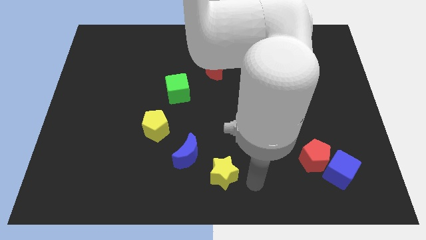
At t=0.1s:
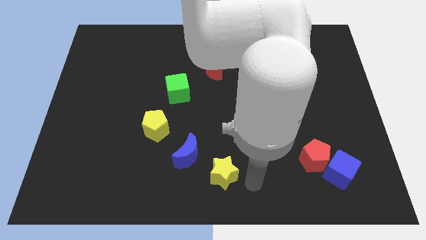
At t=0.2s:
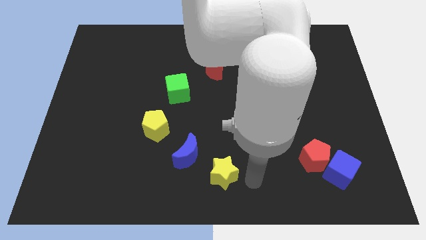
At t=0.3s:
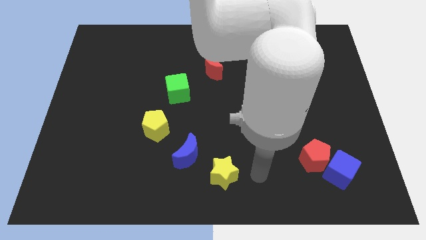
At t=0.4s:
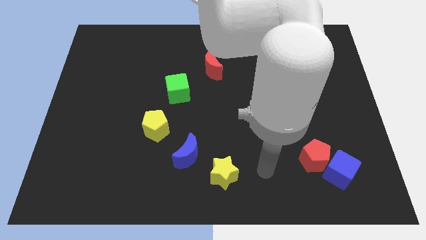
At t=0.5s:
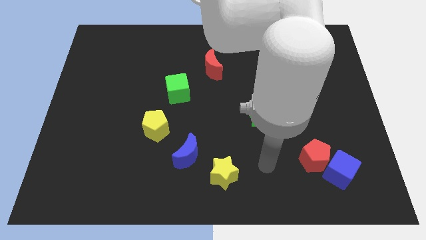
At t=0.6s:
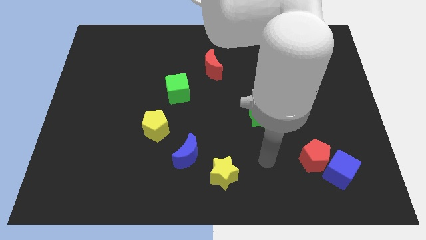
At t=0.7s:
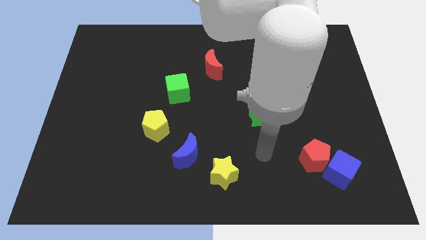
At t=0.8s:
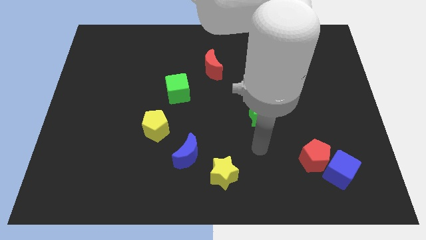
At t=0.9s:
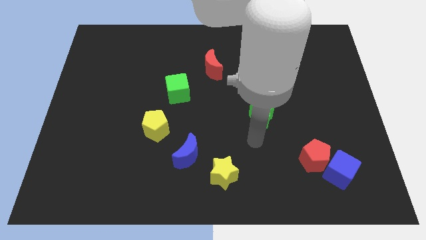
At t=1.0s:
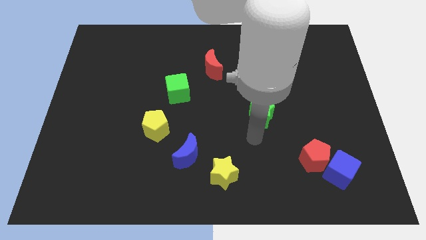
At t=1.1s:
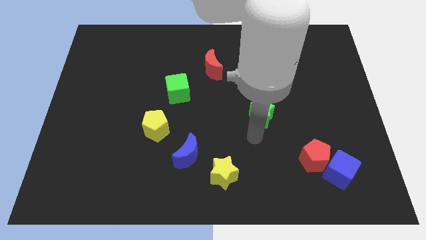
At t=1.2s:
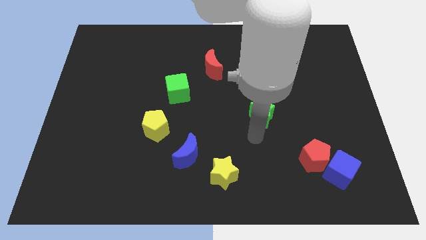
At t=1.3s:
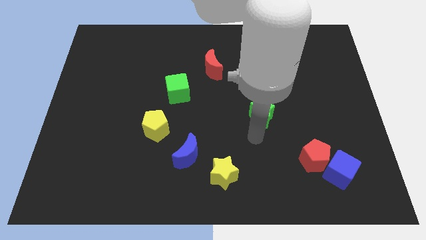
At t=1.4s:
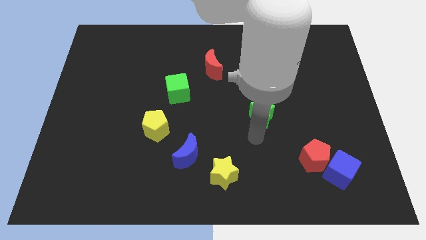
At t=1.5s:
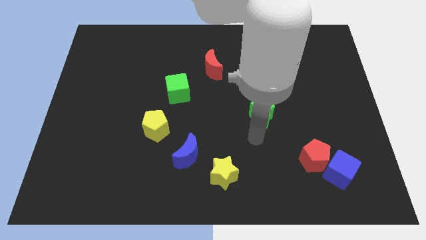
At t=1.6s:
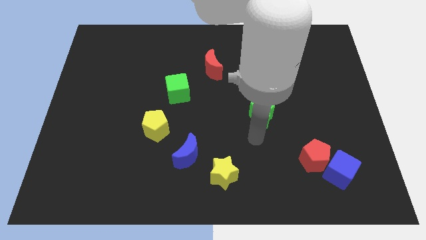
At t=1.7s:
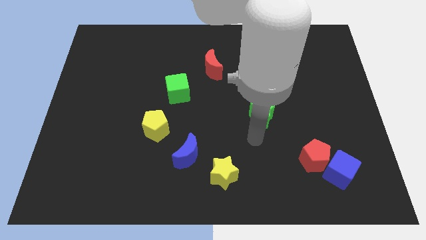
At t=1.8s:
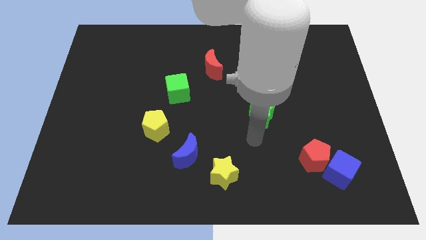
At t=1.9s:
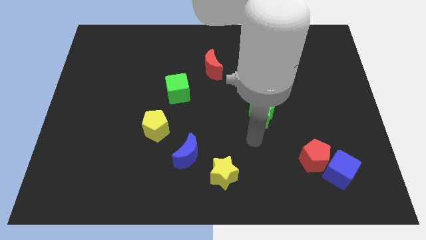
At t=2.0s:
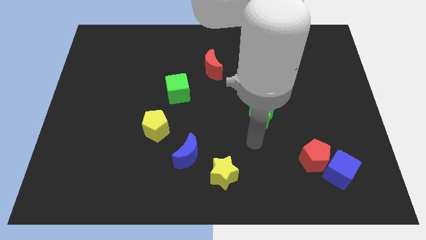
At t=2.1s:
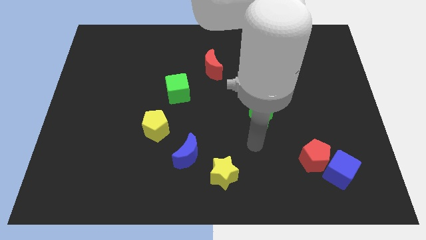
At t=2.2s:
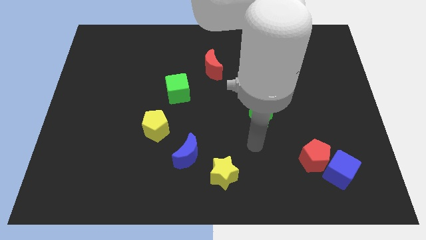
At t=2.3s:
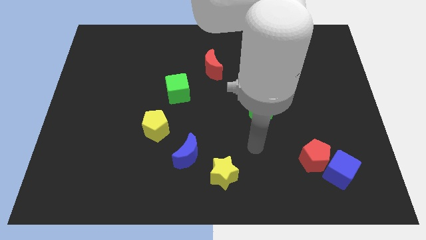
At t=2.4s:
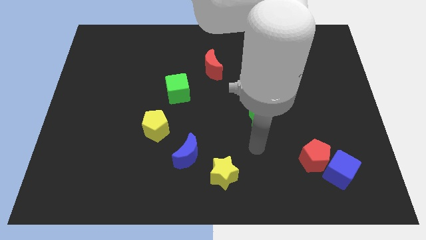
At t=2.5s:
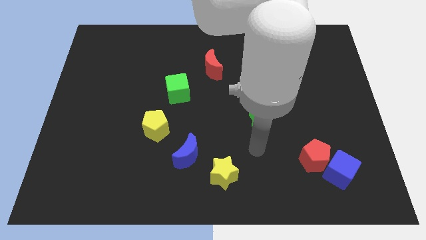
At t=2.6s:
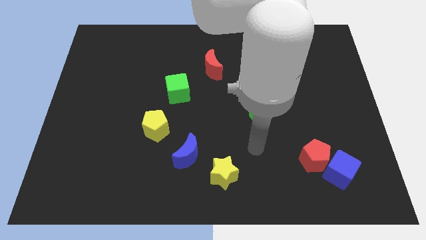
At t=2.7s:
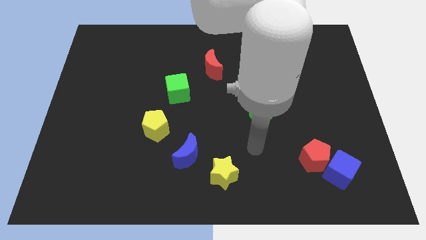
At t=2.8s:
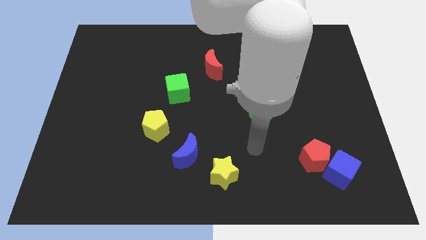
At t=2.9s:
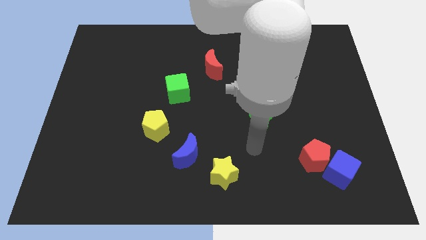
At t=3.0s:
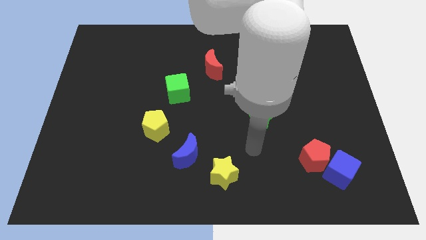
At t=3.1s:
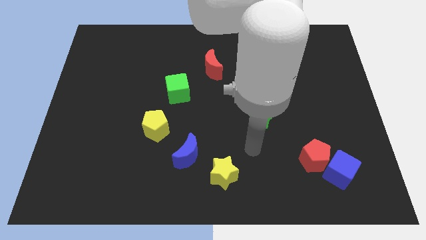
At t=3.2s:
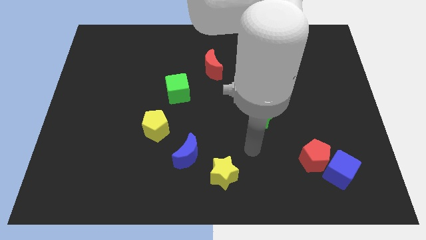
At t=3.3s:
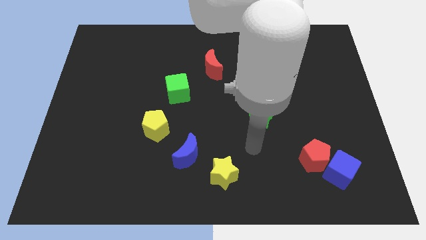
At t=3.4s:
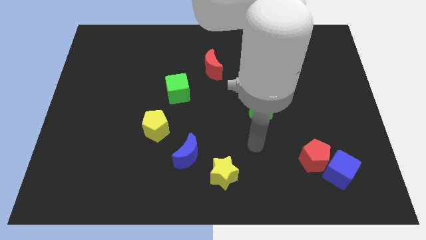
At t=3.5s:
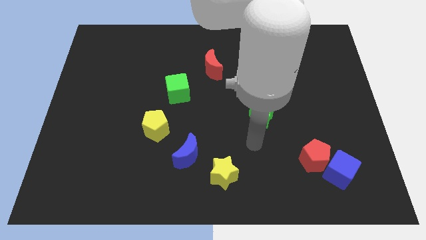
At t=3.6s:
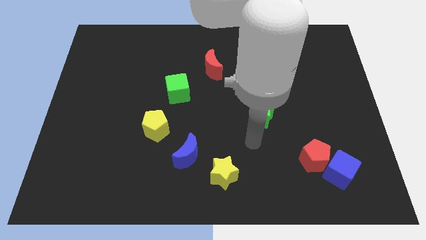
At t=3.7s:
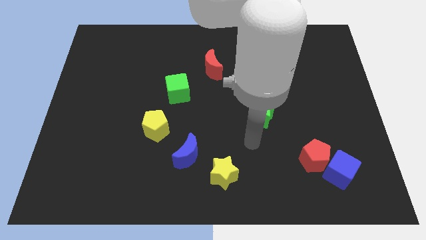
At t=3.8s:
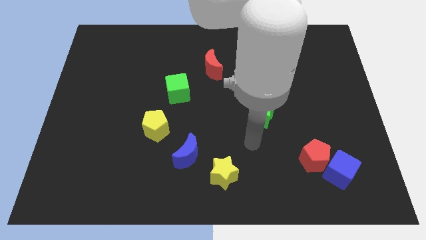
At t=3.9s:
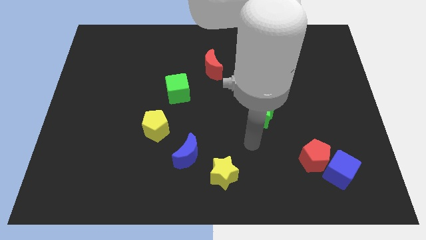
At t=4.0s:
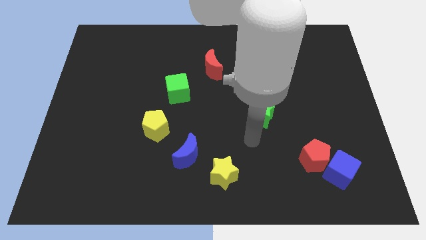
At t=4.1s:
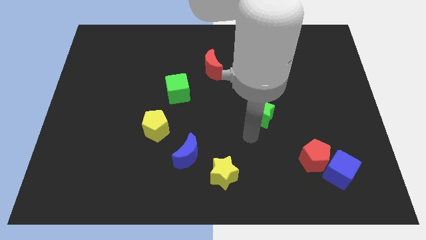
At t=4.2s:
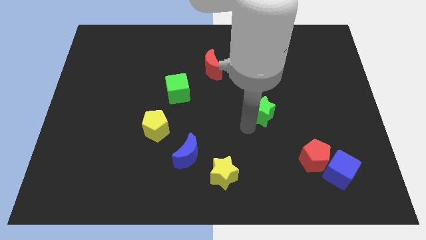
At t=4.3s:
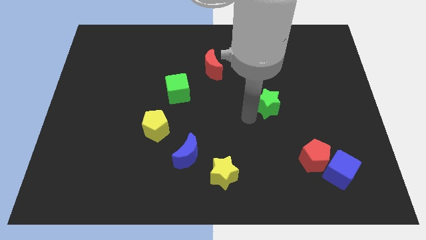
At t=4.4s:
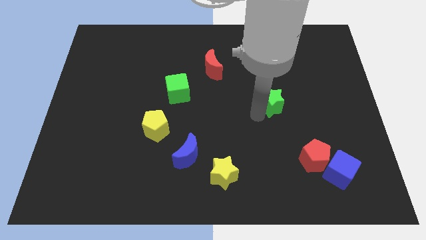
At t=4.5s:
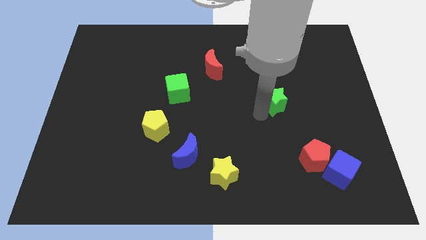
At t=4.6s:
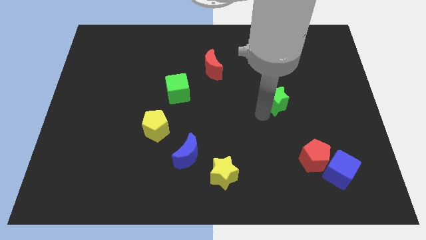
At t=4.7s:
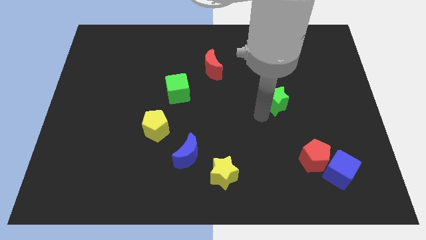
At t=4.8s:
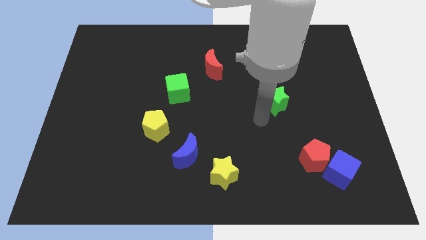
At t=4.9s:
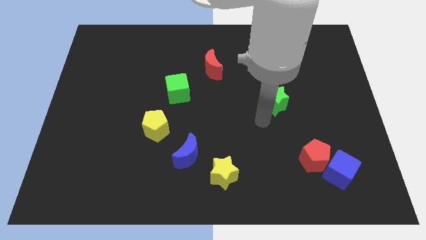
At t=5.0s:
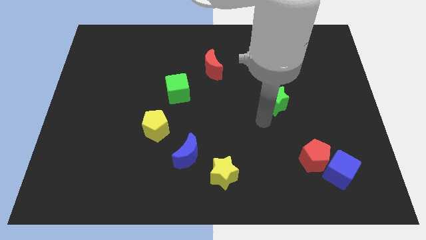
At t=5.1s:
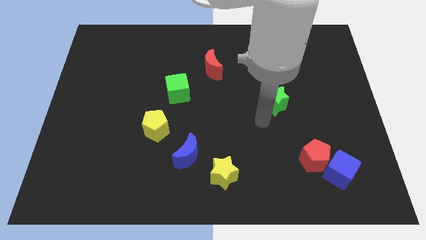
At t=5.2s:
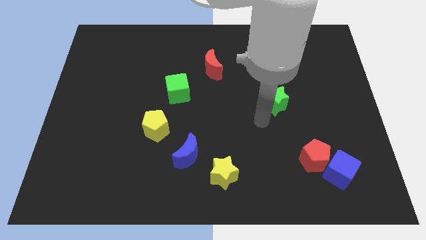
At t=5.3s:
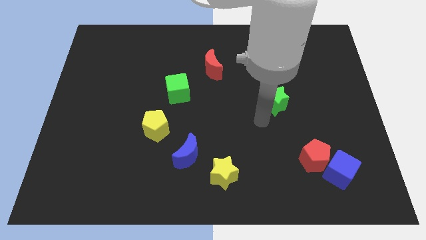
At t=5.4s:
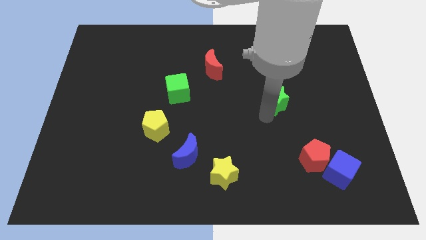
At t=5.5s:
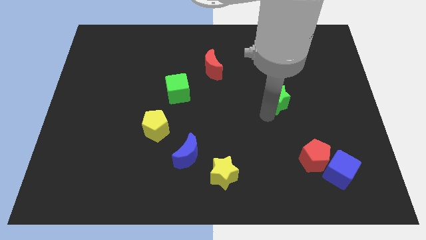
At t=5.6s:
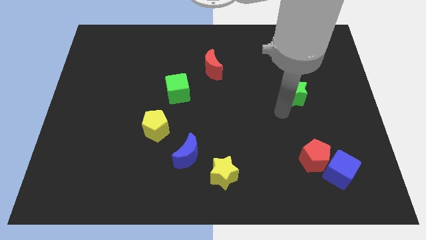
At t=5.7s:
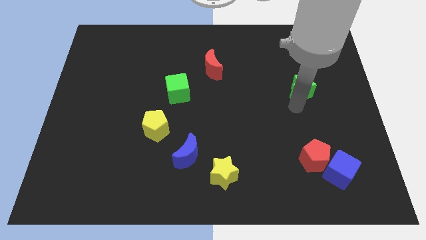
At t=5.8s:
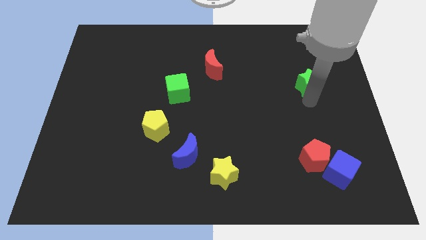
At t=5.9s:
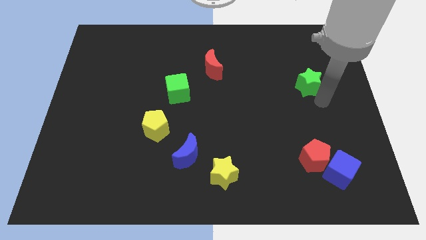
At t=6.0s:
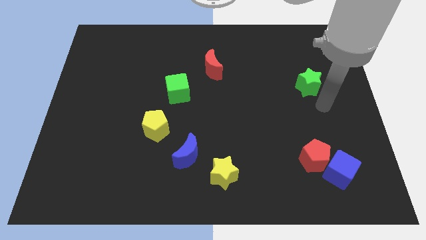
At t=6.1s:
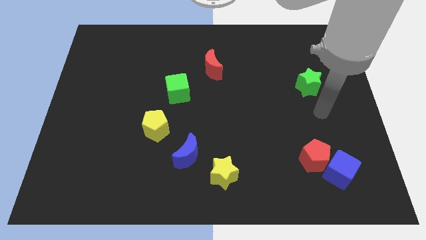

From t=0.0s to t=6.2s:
move the green star slightly towards the top right corner of the board

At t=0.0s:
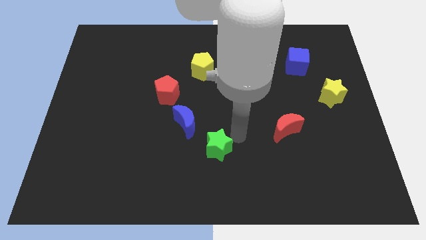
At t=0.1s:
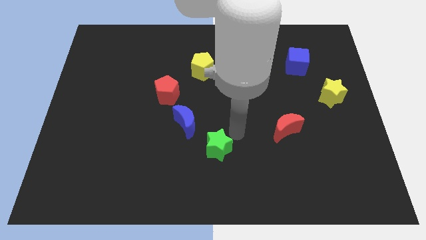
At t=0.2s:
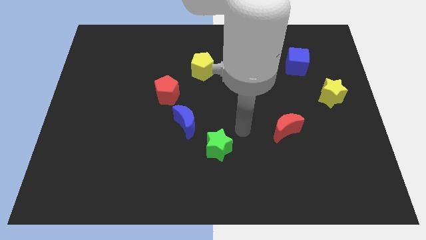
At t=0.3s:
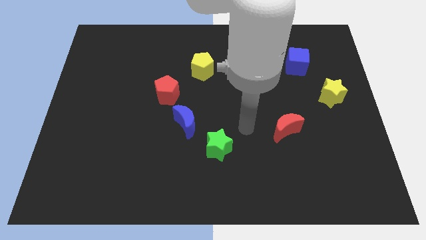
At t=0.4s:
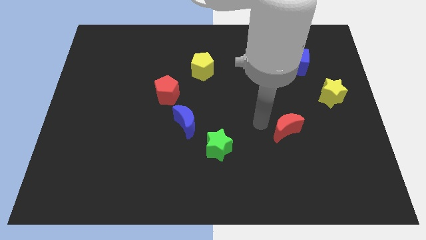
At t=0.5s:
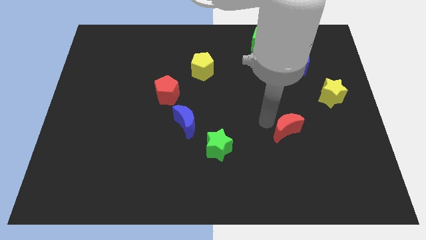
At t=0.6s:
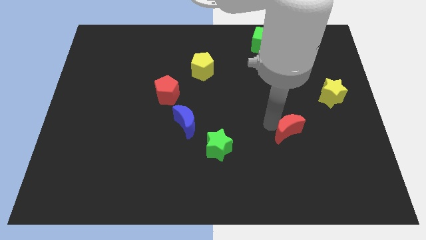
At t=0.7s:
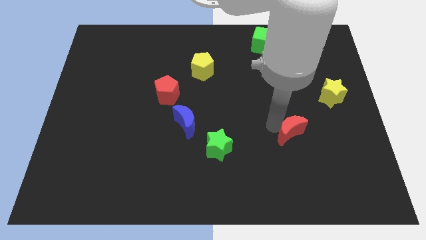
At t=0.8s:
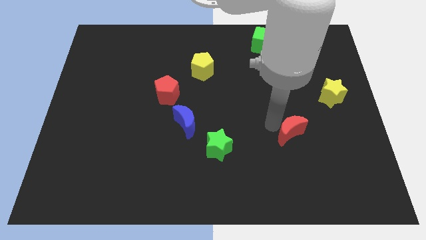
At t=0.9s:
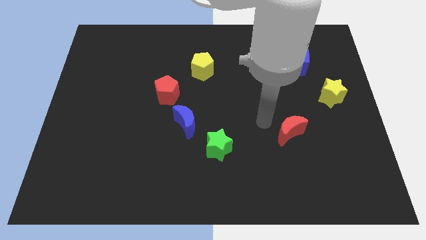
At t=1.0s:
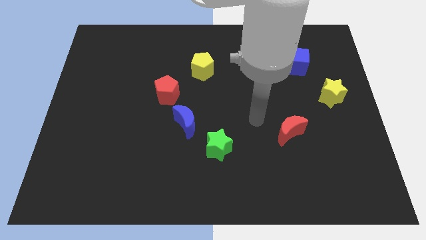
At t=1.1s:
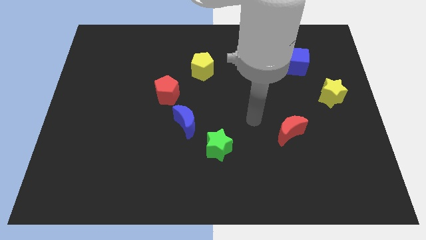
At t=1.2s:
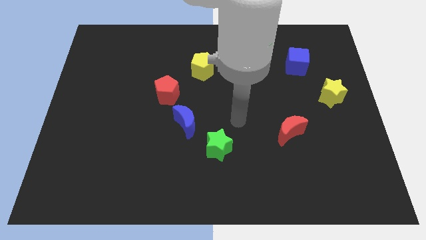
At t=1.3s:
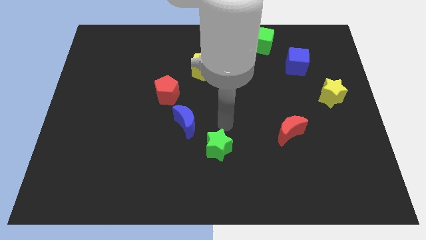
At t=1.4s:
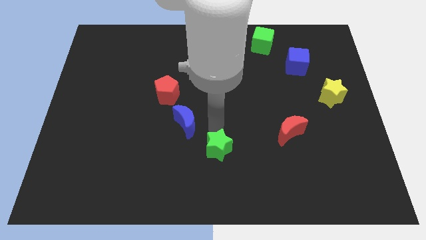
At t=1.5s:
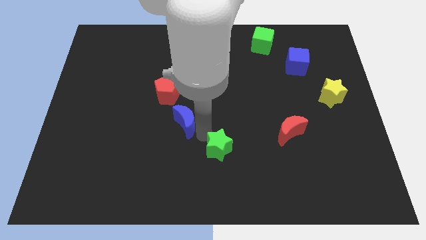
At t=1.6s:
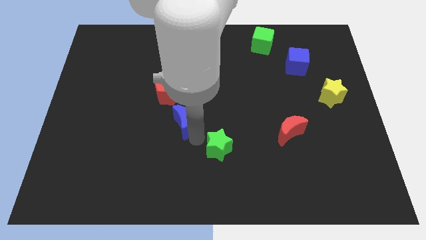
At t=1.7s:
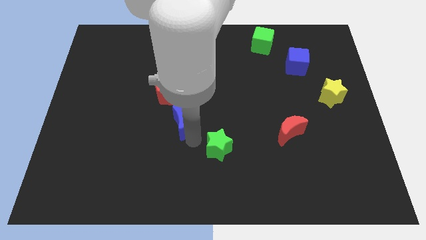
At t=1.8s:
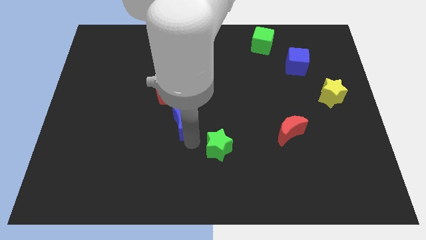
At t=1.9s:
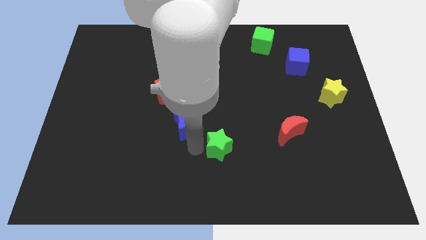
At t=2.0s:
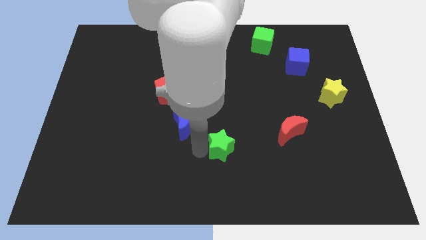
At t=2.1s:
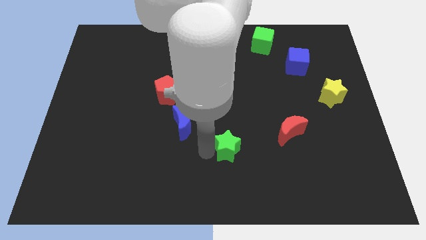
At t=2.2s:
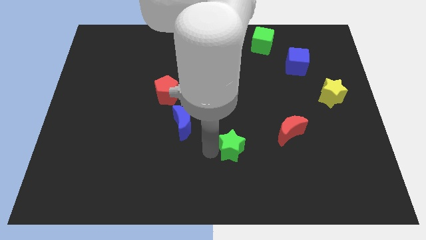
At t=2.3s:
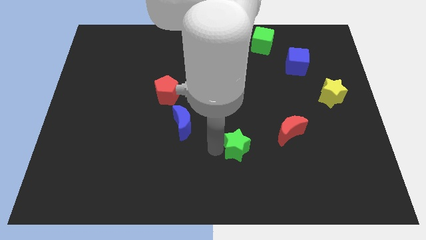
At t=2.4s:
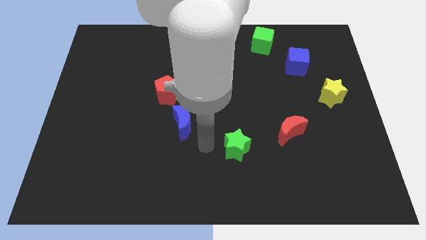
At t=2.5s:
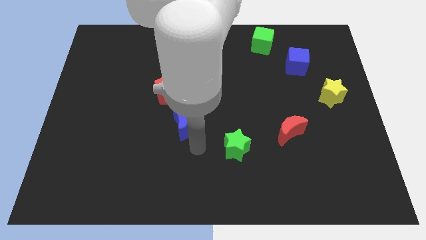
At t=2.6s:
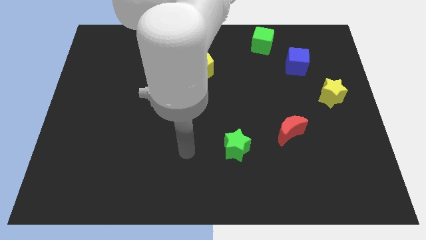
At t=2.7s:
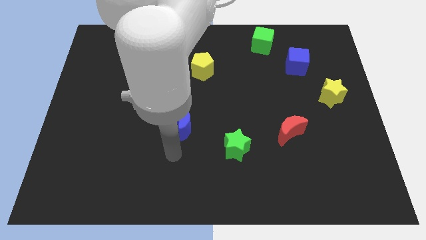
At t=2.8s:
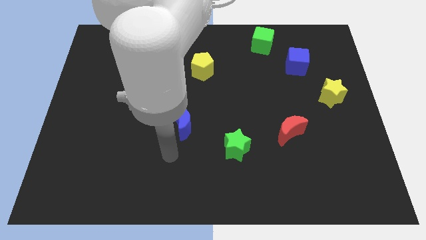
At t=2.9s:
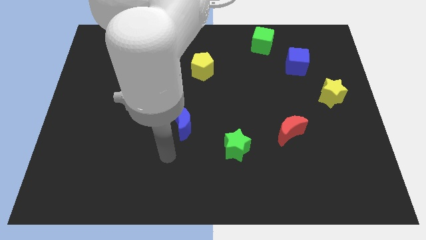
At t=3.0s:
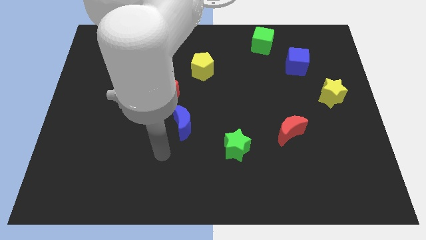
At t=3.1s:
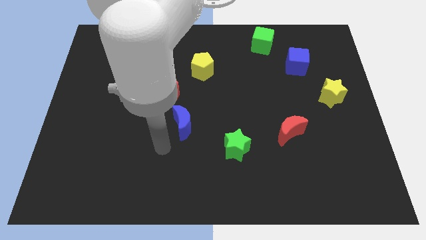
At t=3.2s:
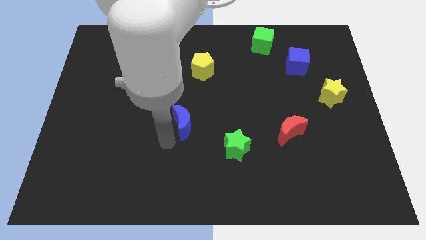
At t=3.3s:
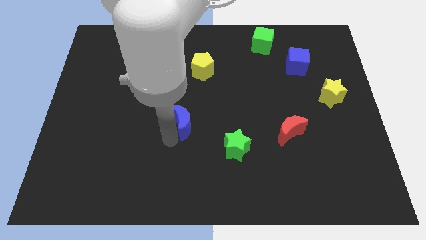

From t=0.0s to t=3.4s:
place the red crescent in between the green star and yellow star
